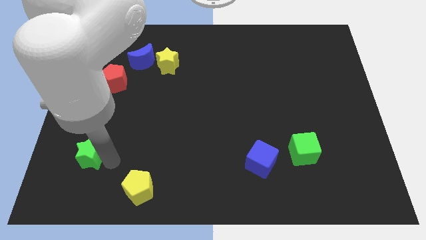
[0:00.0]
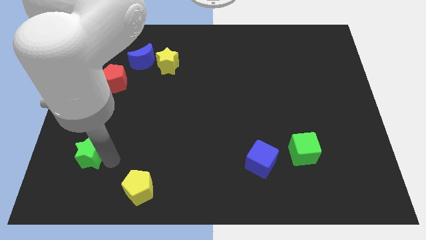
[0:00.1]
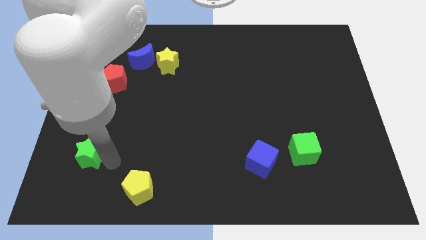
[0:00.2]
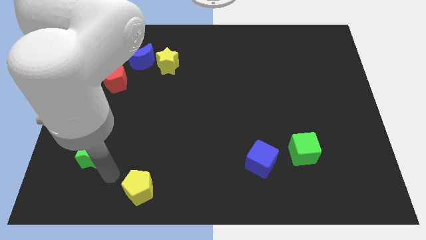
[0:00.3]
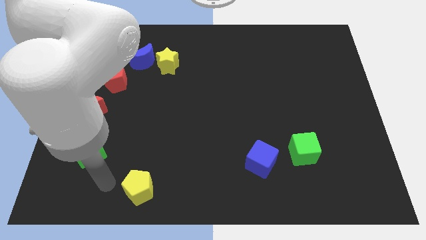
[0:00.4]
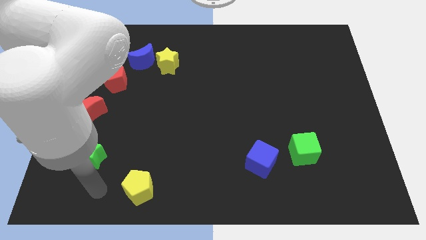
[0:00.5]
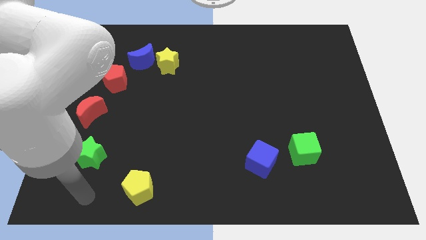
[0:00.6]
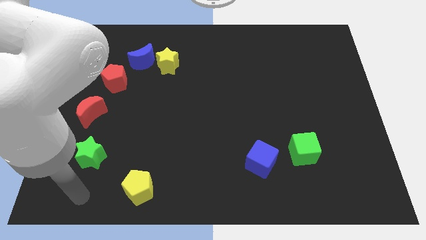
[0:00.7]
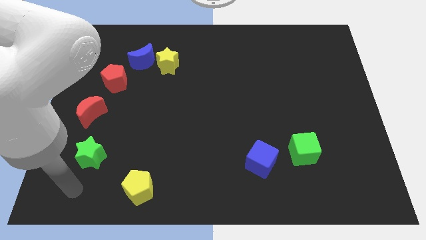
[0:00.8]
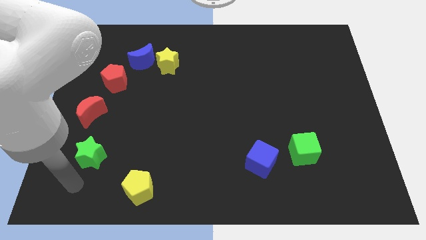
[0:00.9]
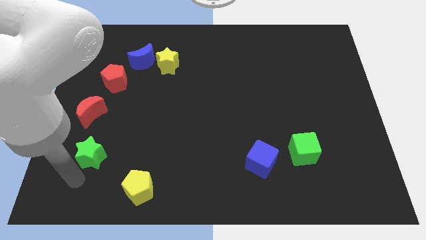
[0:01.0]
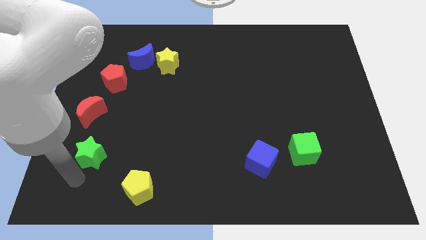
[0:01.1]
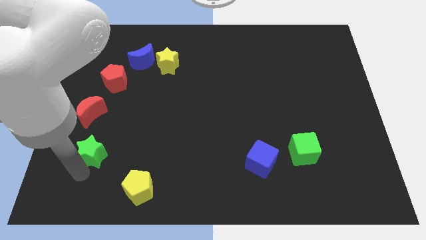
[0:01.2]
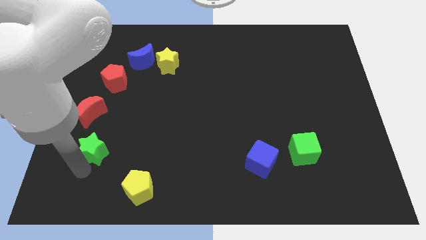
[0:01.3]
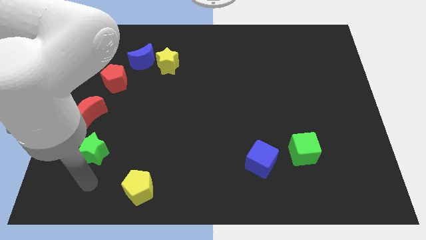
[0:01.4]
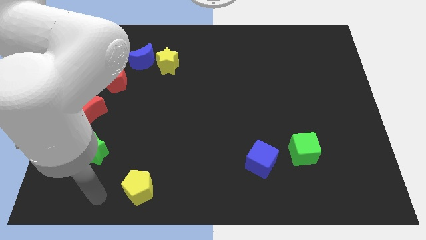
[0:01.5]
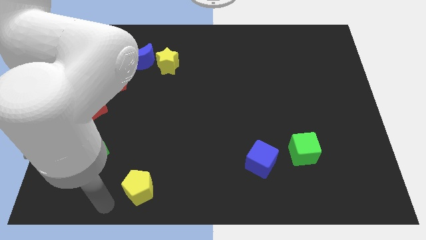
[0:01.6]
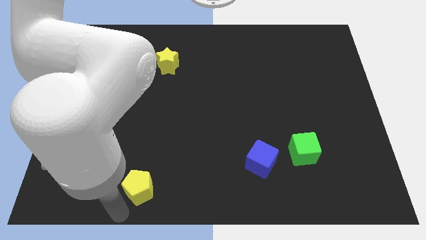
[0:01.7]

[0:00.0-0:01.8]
push the green star towards the red crescent

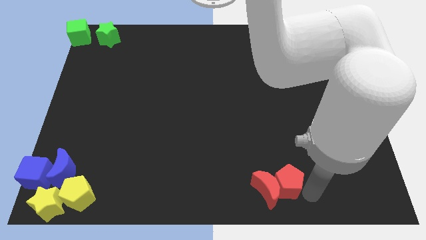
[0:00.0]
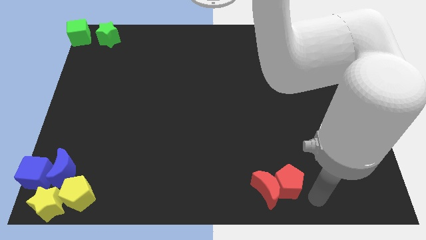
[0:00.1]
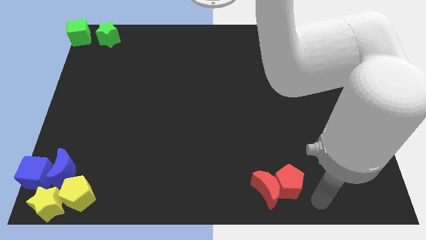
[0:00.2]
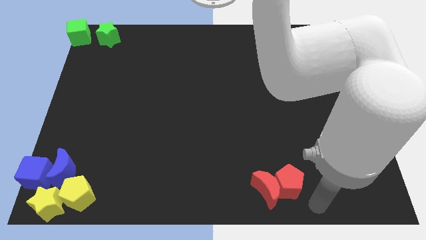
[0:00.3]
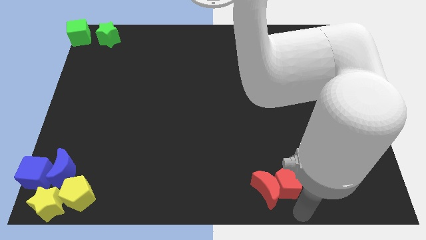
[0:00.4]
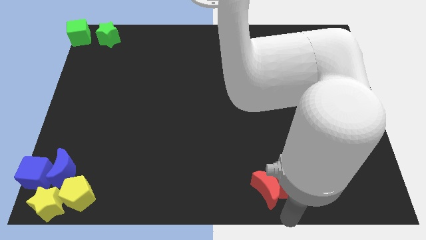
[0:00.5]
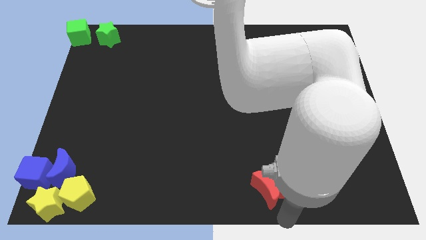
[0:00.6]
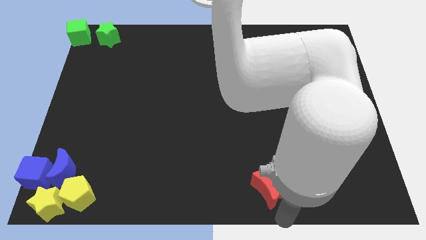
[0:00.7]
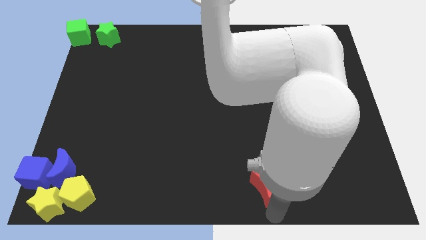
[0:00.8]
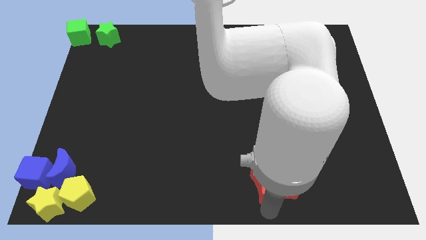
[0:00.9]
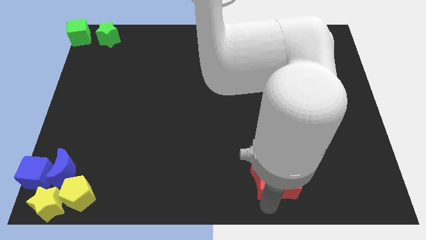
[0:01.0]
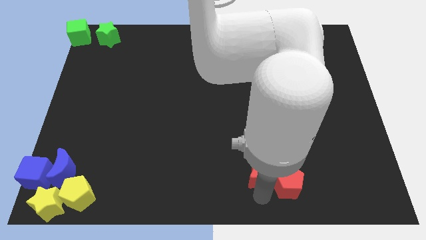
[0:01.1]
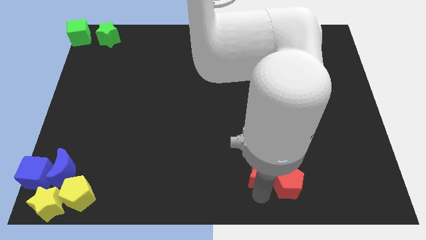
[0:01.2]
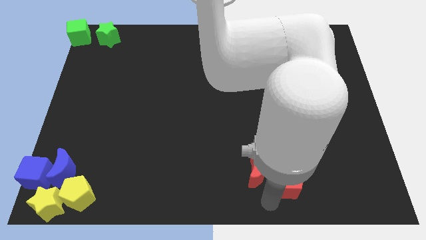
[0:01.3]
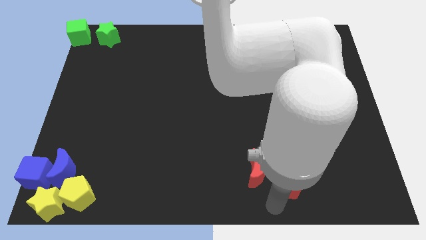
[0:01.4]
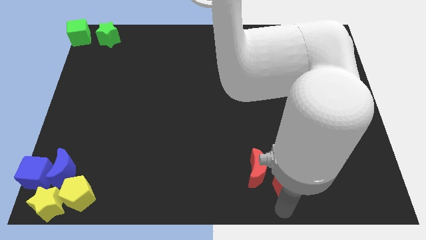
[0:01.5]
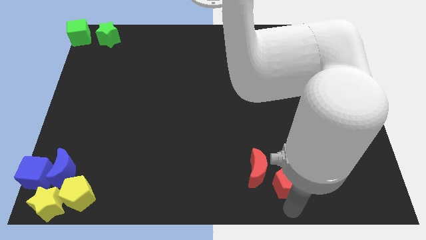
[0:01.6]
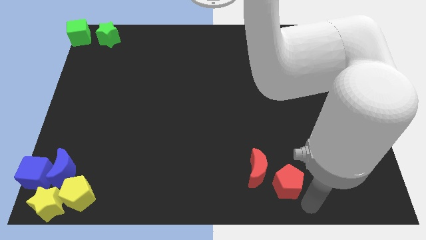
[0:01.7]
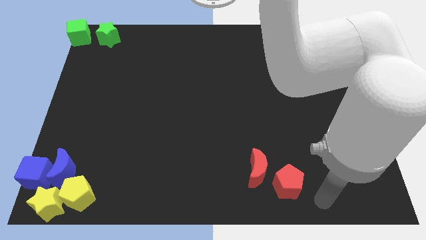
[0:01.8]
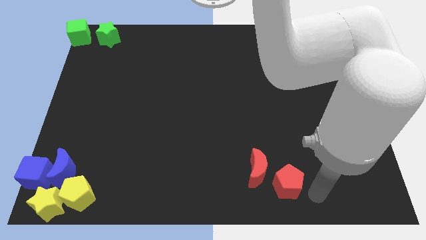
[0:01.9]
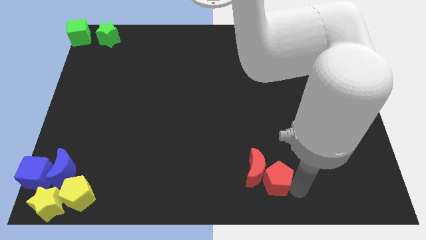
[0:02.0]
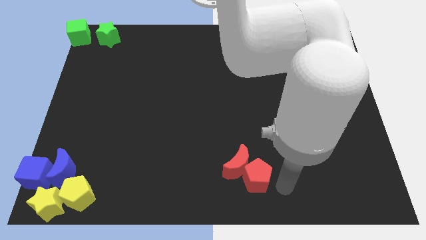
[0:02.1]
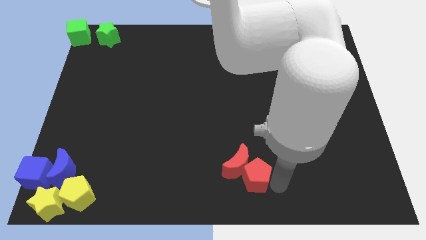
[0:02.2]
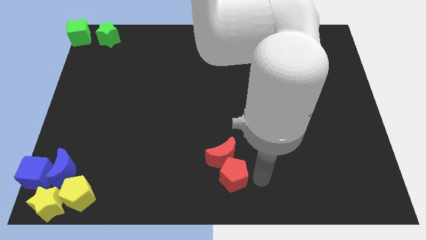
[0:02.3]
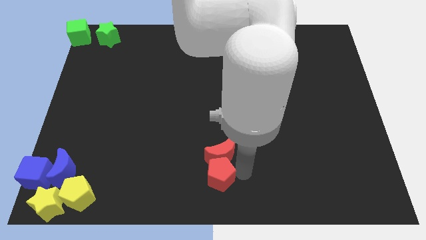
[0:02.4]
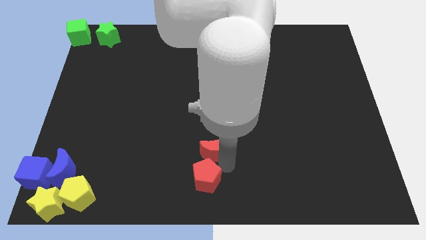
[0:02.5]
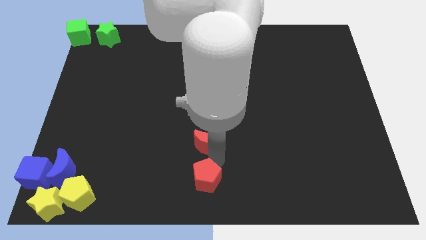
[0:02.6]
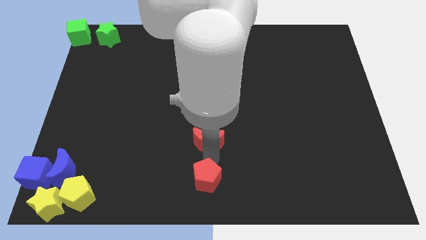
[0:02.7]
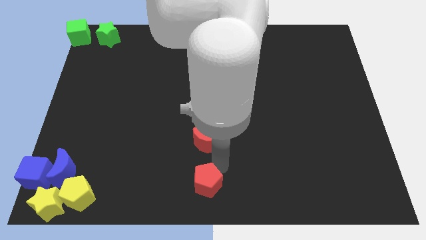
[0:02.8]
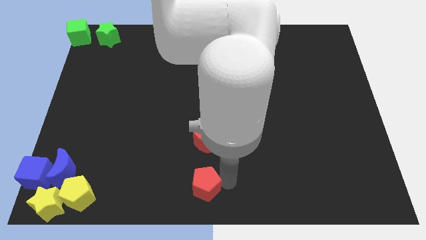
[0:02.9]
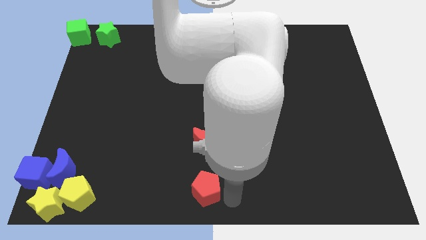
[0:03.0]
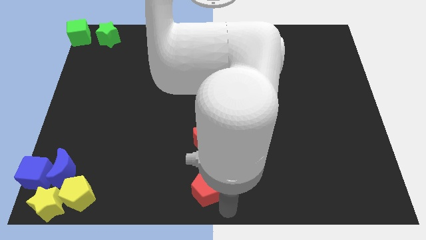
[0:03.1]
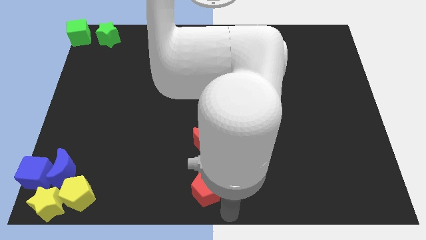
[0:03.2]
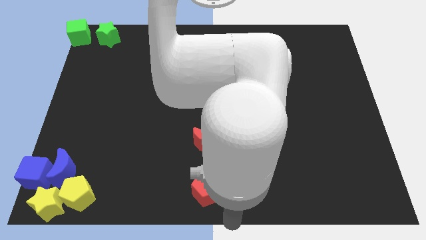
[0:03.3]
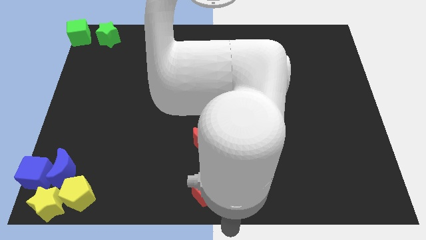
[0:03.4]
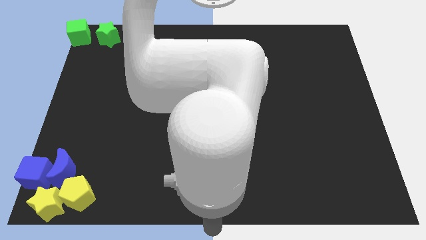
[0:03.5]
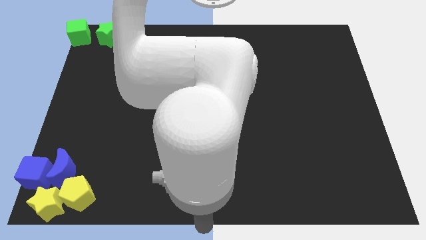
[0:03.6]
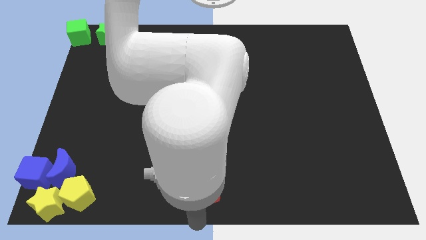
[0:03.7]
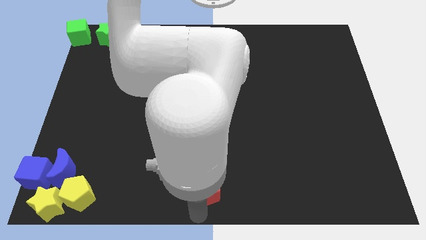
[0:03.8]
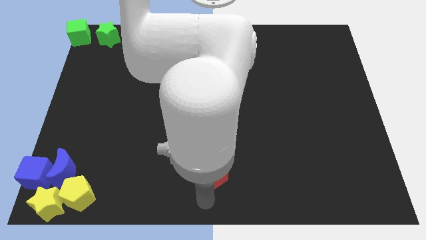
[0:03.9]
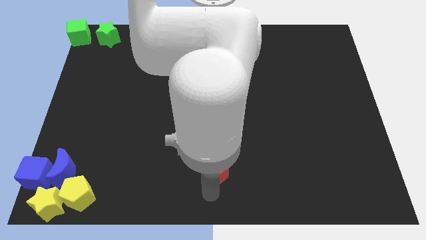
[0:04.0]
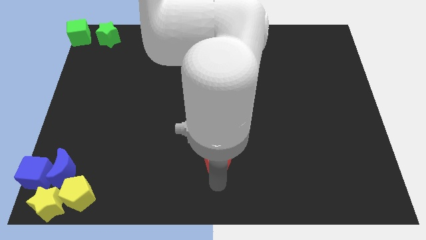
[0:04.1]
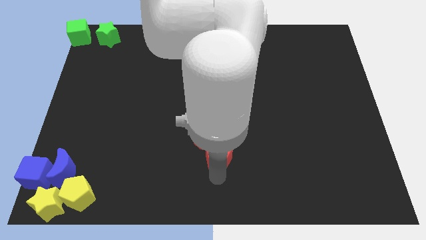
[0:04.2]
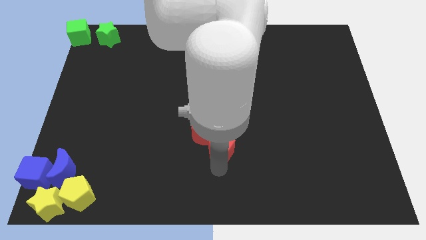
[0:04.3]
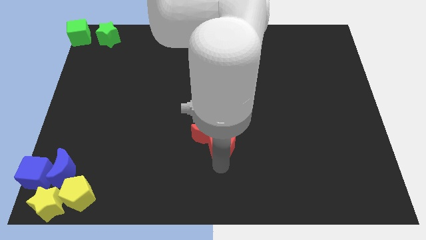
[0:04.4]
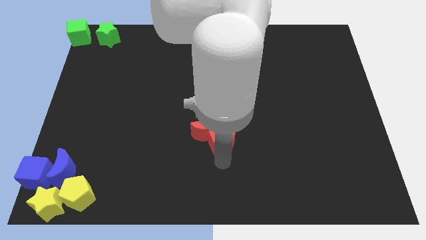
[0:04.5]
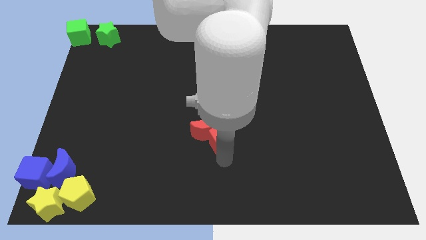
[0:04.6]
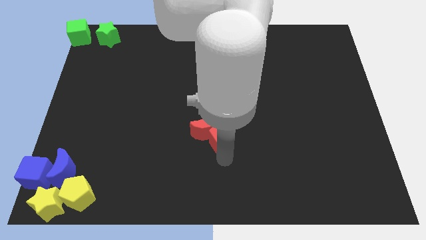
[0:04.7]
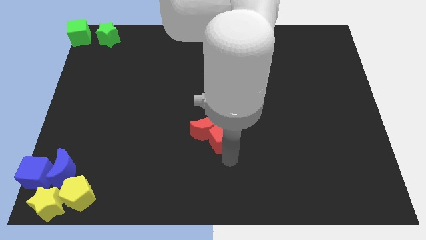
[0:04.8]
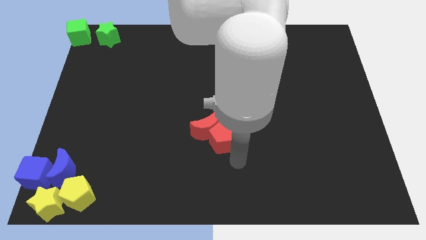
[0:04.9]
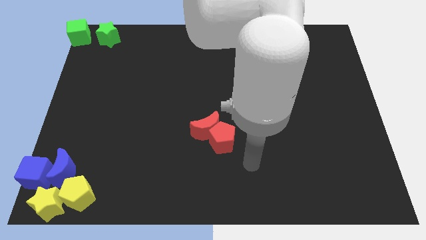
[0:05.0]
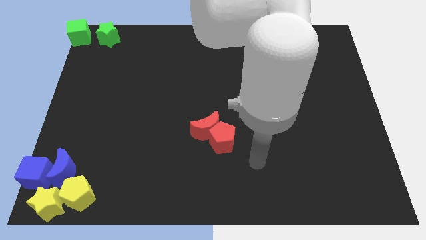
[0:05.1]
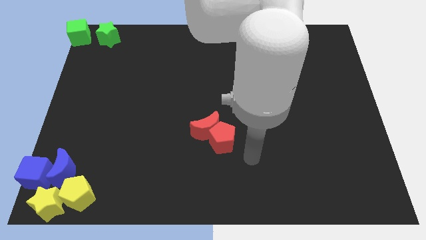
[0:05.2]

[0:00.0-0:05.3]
move the red blocks towards the center of the table

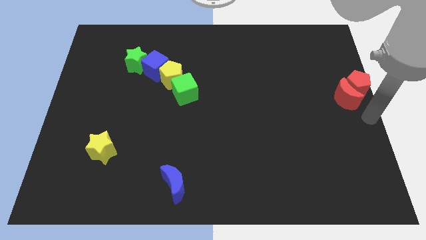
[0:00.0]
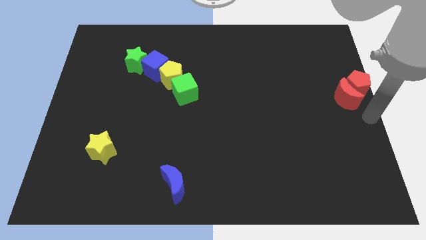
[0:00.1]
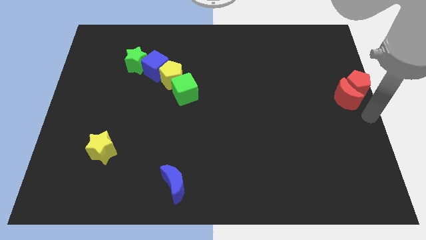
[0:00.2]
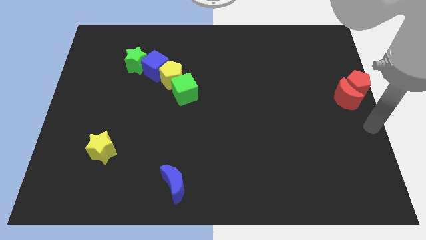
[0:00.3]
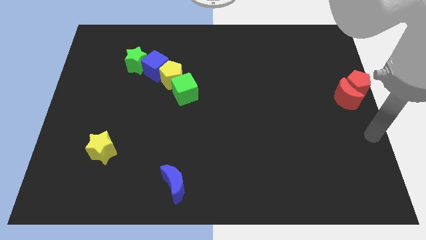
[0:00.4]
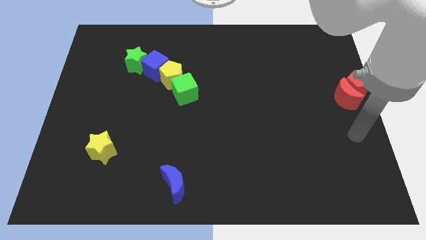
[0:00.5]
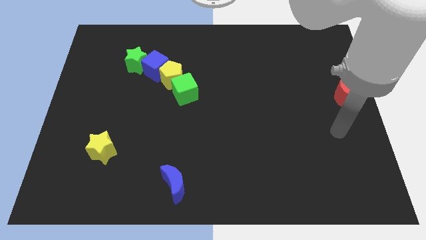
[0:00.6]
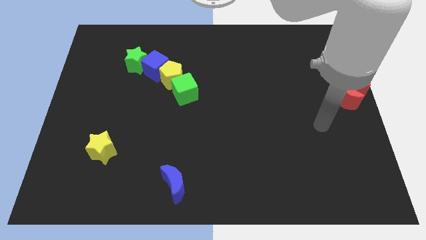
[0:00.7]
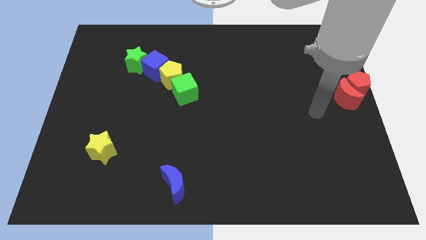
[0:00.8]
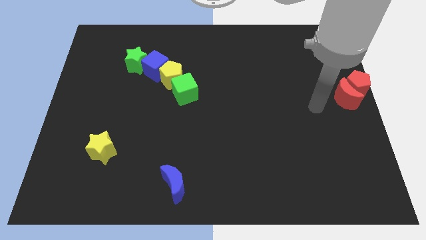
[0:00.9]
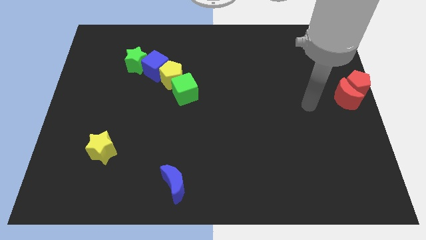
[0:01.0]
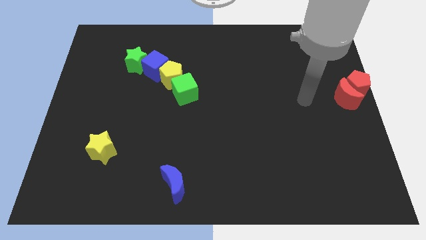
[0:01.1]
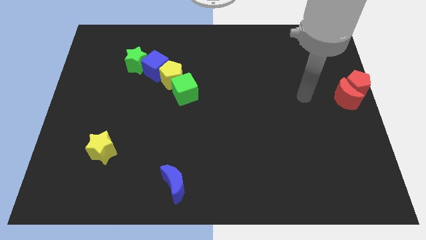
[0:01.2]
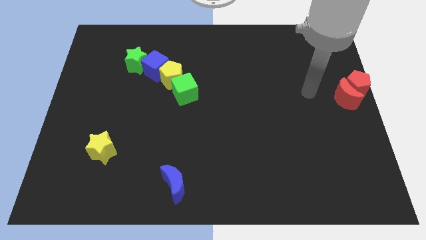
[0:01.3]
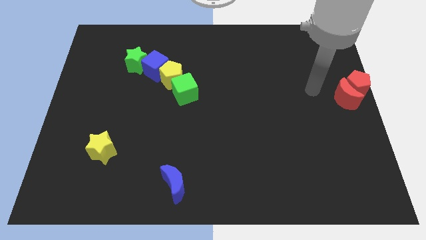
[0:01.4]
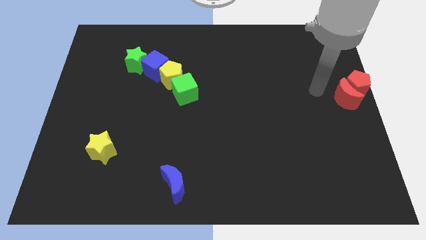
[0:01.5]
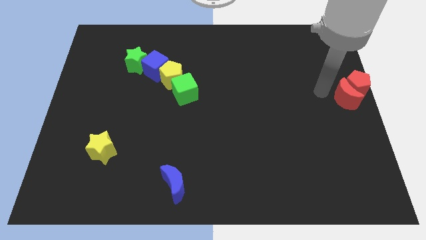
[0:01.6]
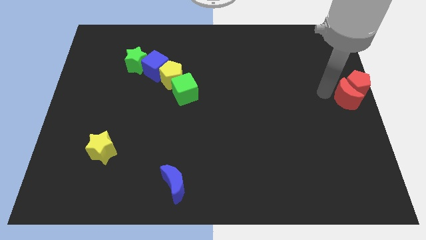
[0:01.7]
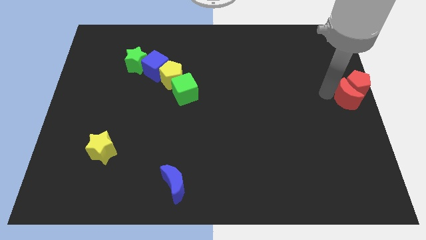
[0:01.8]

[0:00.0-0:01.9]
place your arm to the top left side of the red moon
